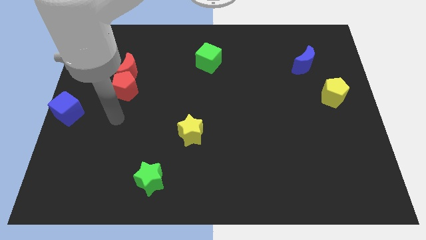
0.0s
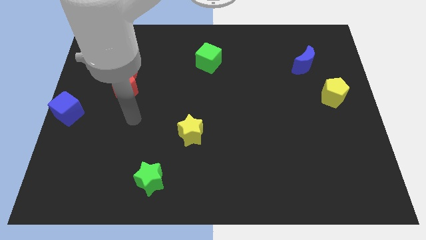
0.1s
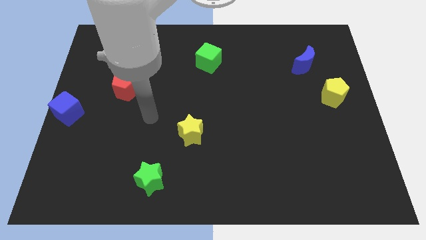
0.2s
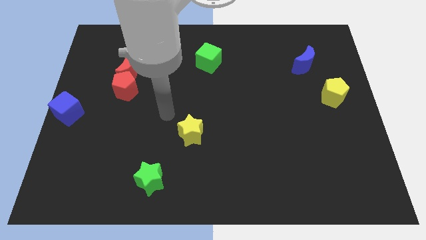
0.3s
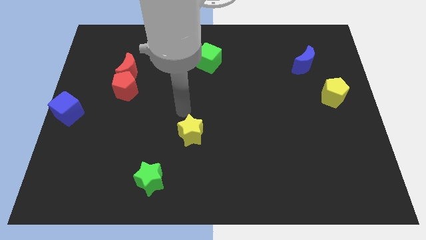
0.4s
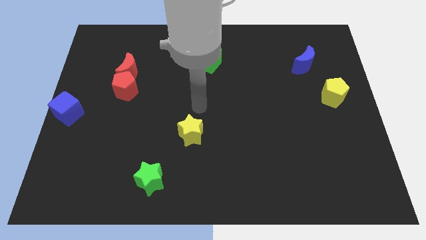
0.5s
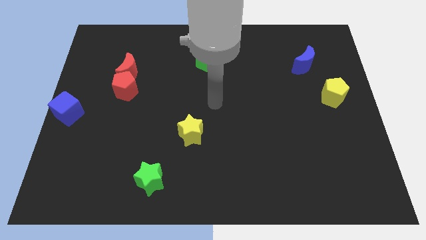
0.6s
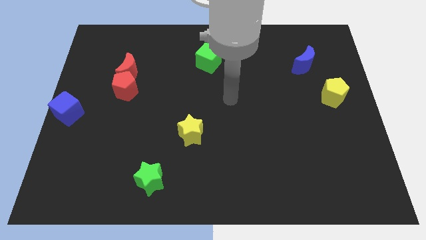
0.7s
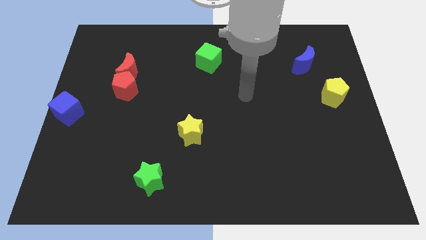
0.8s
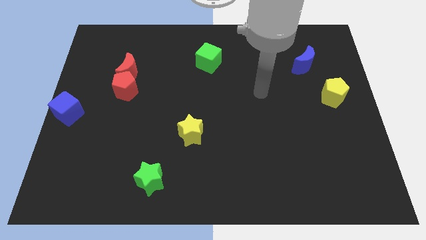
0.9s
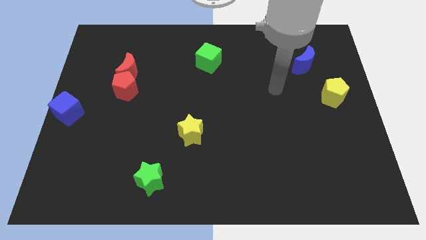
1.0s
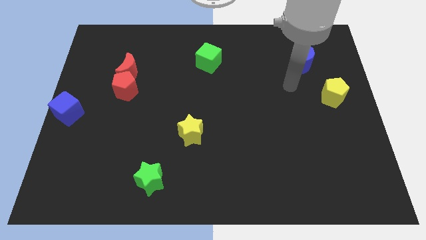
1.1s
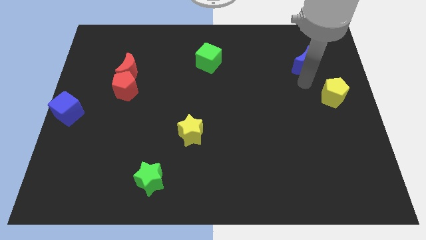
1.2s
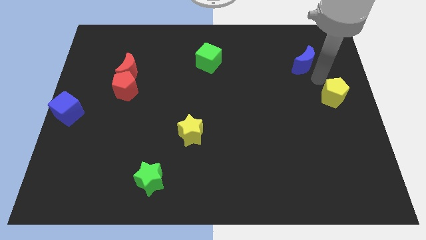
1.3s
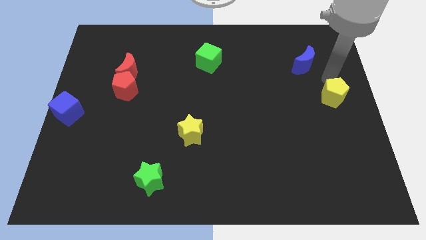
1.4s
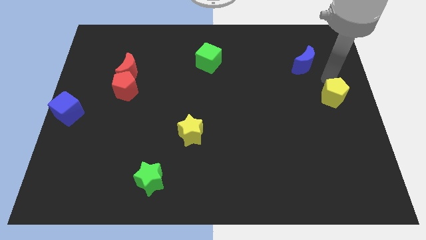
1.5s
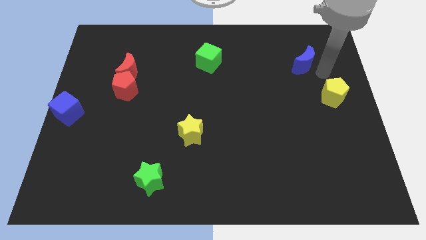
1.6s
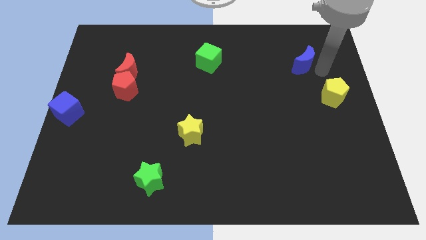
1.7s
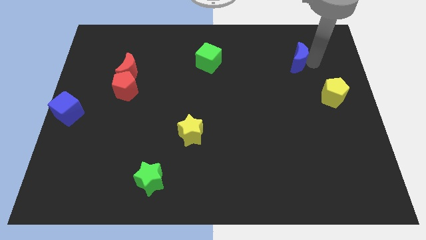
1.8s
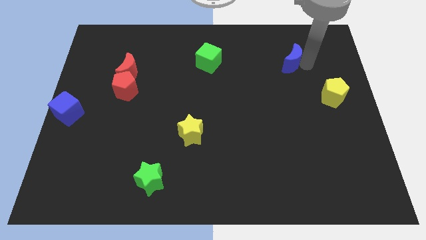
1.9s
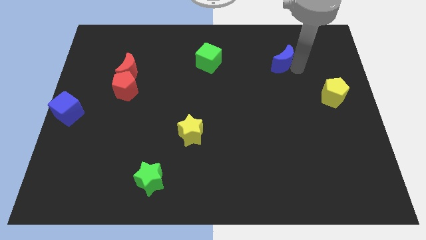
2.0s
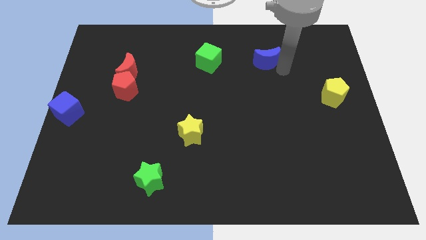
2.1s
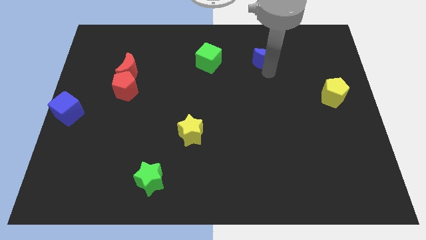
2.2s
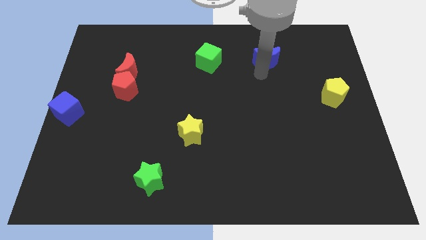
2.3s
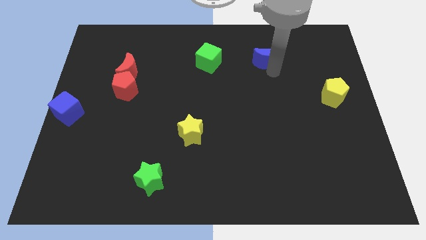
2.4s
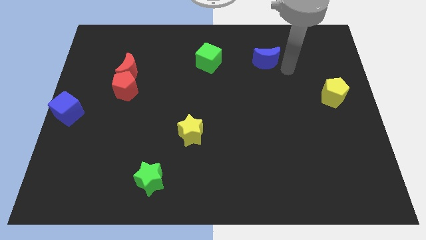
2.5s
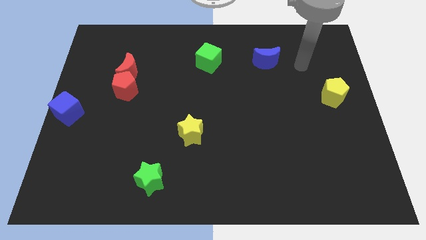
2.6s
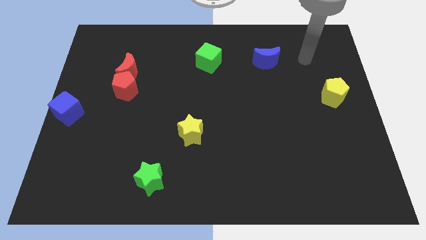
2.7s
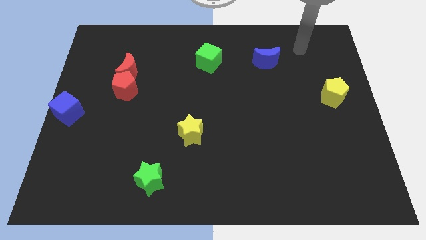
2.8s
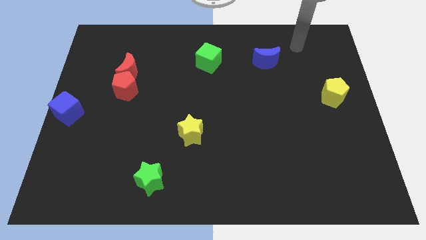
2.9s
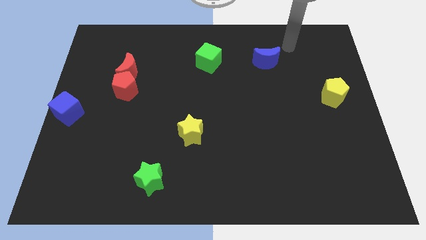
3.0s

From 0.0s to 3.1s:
move blue moon to the right of green cube

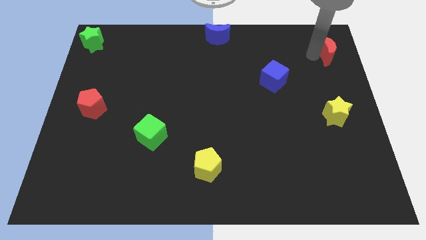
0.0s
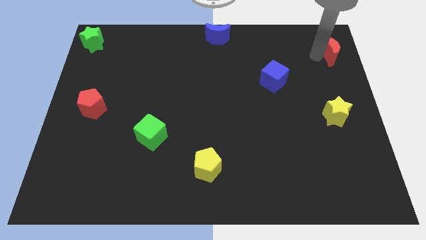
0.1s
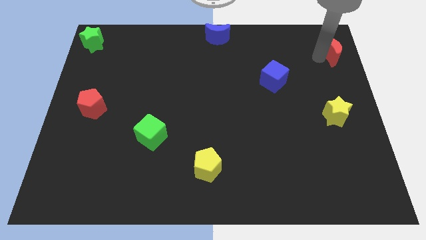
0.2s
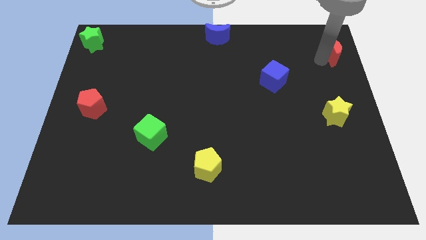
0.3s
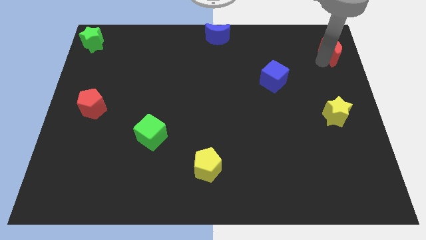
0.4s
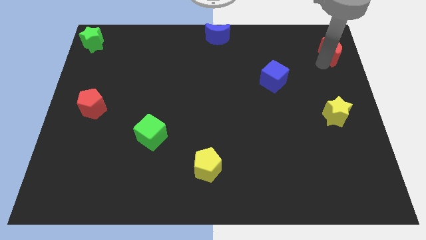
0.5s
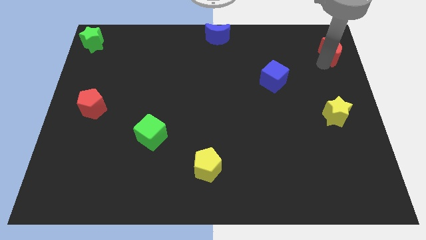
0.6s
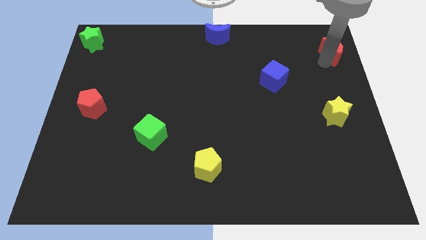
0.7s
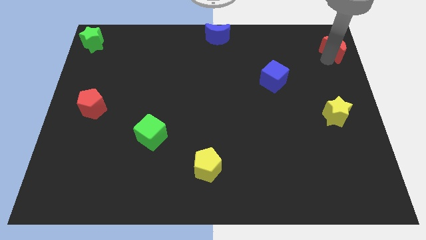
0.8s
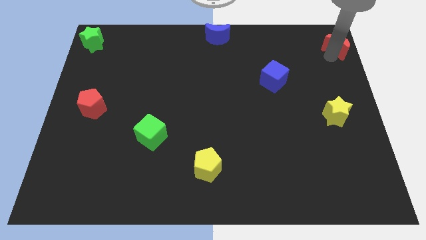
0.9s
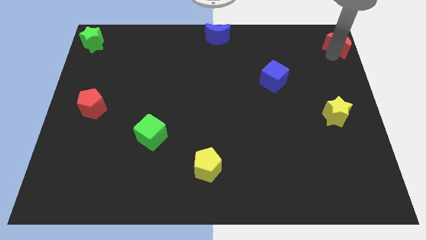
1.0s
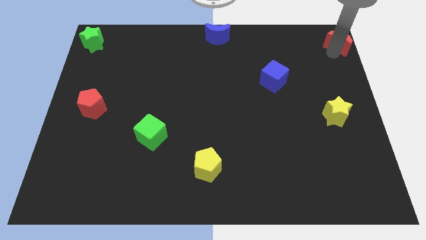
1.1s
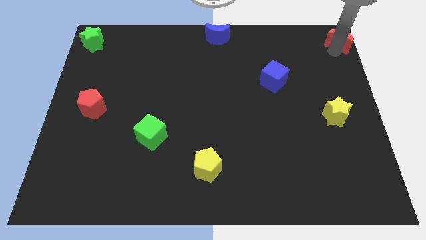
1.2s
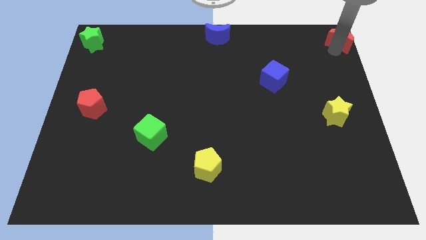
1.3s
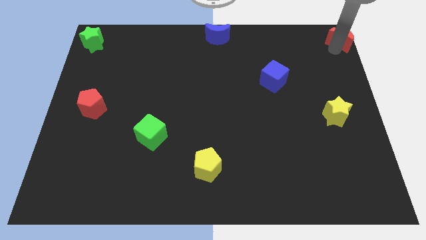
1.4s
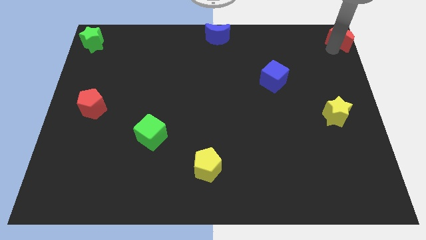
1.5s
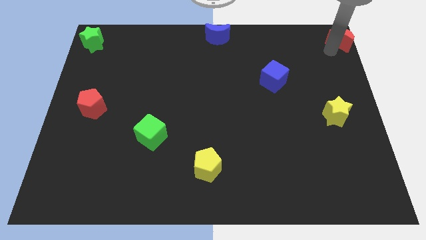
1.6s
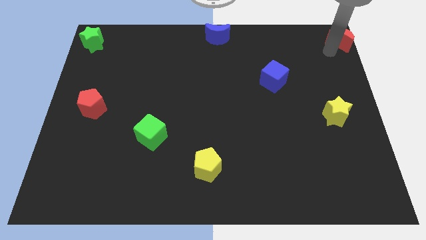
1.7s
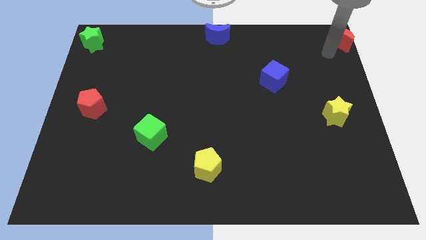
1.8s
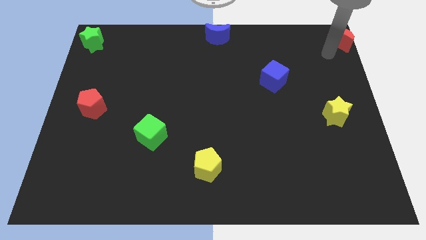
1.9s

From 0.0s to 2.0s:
push red moon to the top right corner of the board

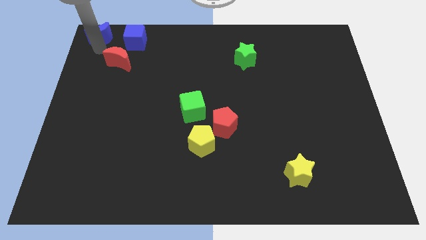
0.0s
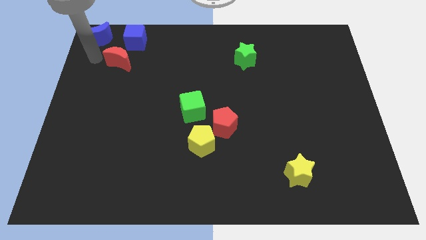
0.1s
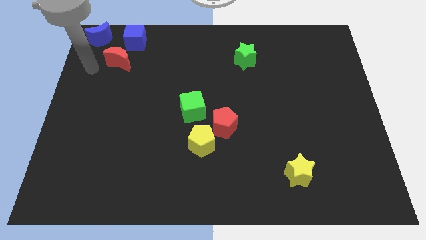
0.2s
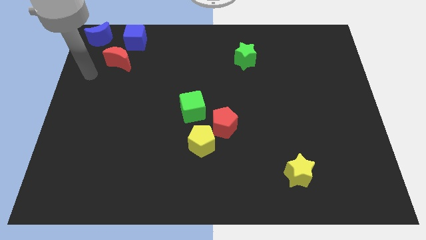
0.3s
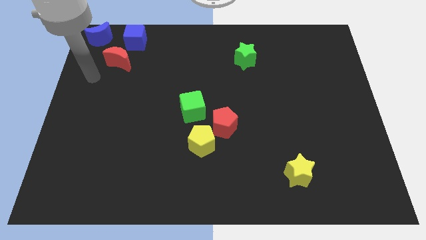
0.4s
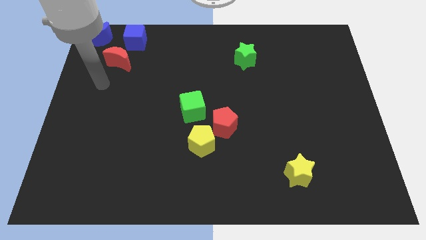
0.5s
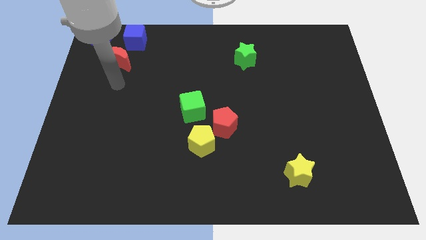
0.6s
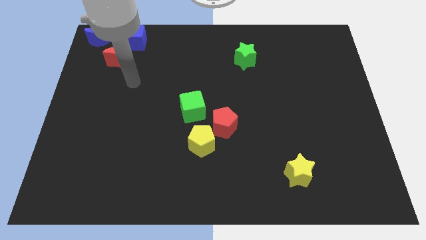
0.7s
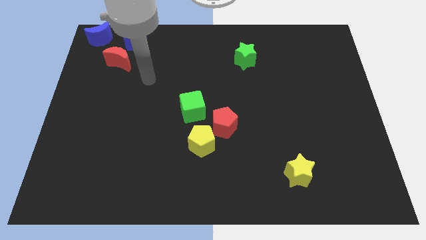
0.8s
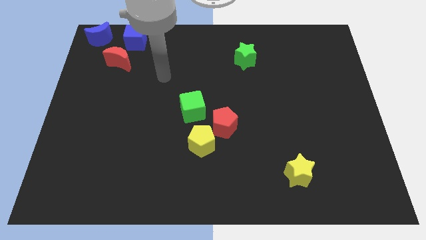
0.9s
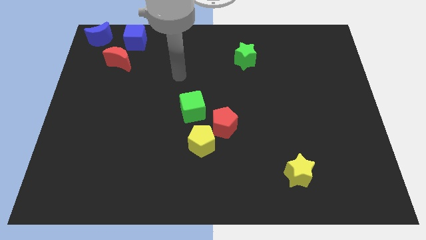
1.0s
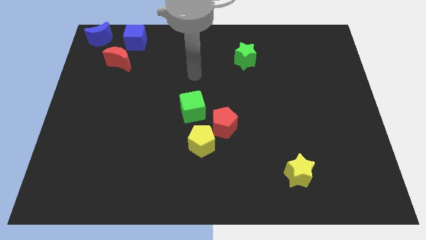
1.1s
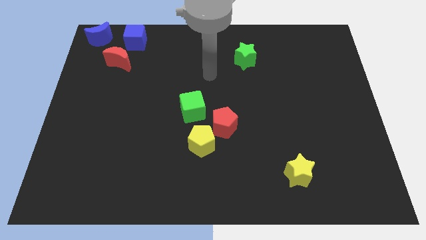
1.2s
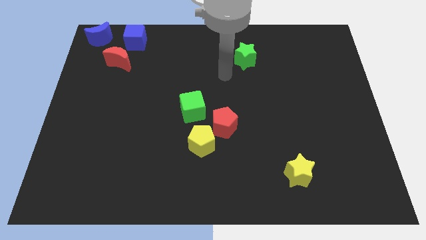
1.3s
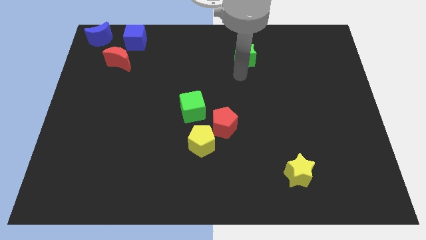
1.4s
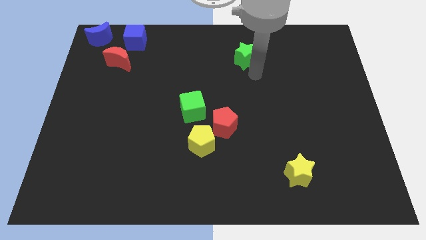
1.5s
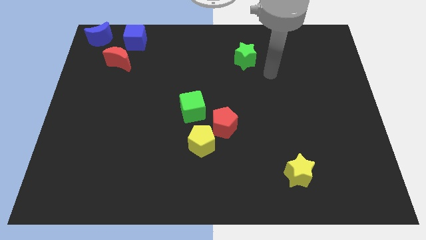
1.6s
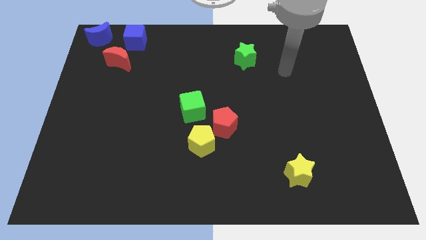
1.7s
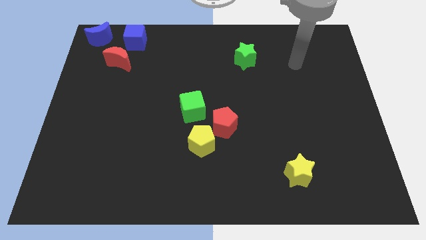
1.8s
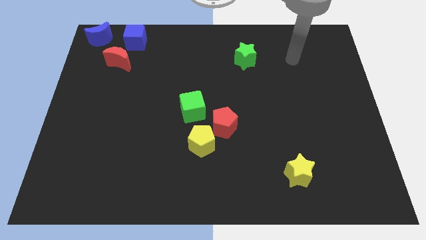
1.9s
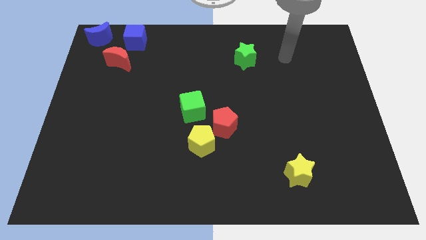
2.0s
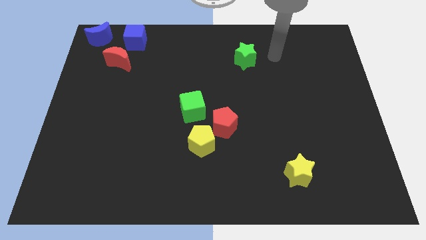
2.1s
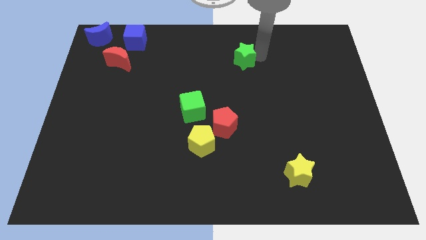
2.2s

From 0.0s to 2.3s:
move your arm towards the green star

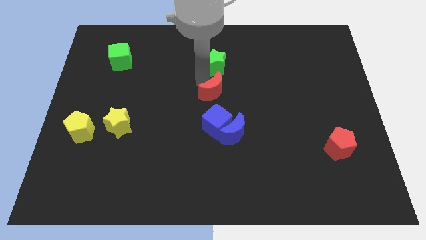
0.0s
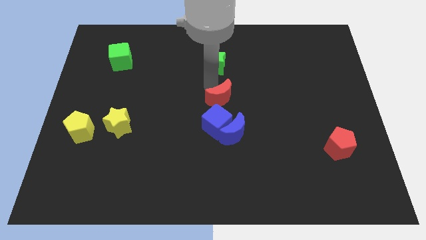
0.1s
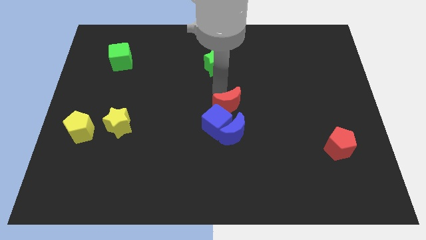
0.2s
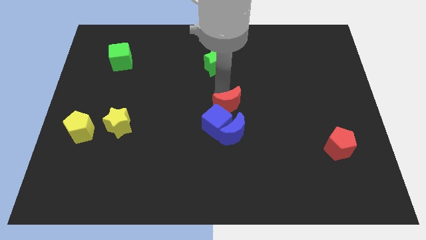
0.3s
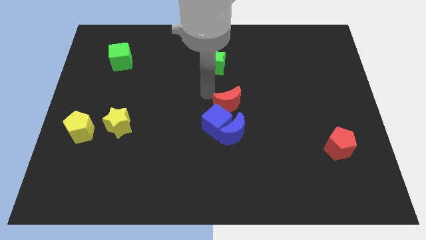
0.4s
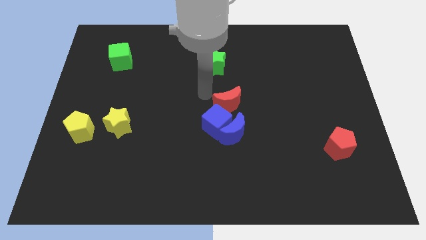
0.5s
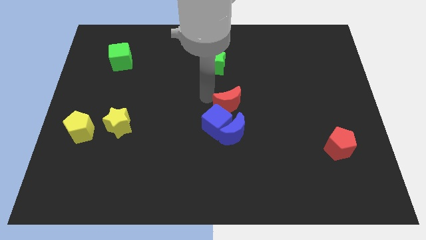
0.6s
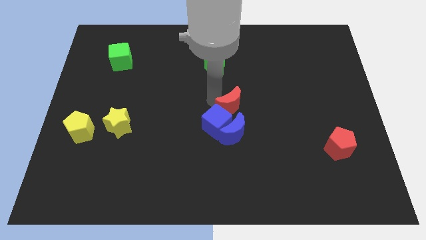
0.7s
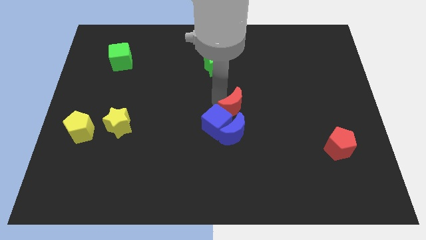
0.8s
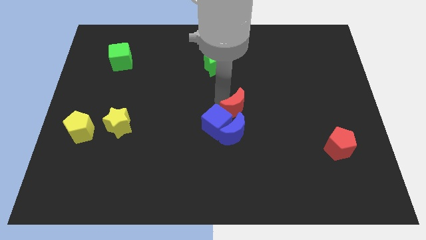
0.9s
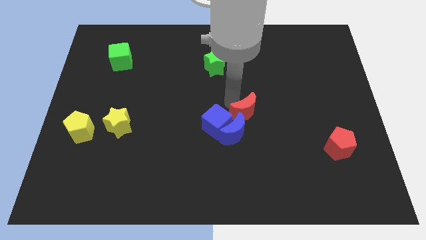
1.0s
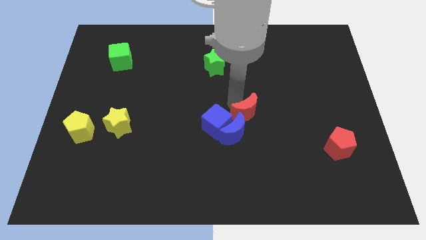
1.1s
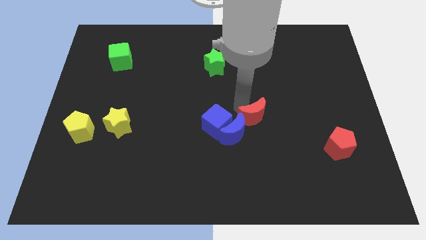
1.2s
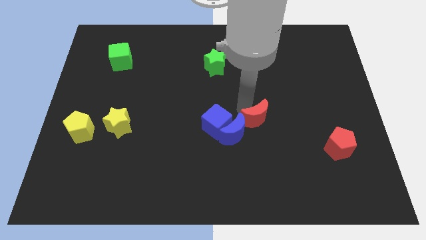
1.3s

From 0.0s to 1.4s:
move the red crescent to the top of the blue crescent

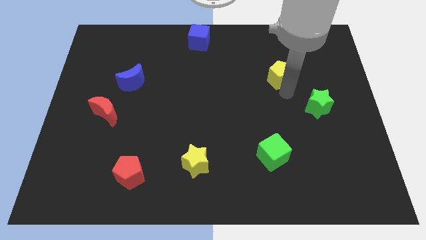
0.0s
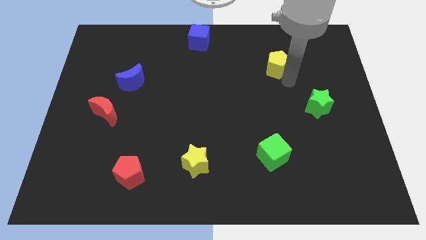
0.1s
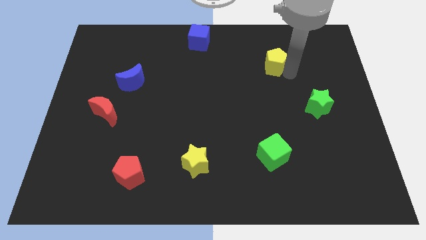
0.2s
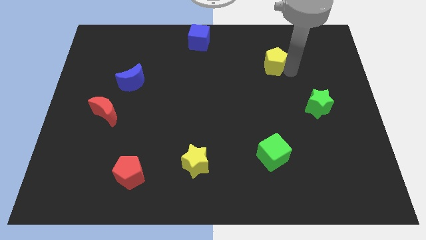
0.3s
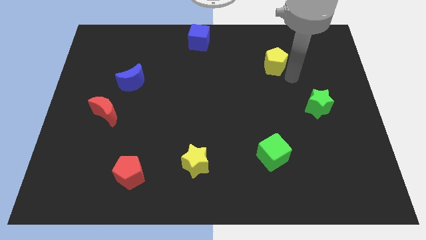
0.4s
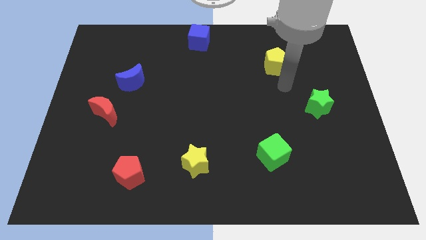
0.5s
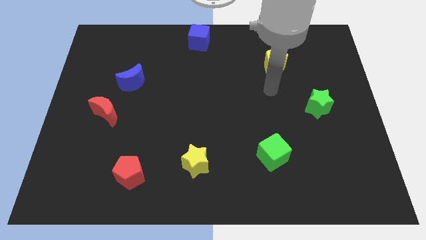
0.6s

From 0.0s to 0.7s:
slightly move the yellow pentagon upward
